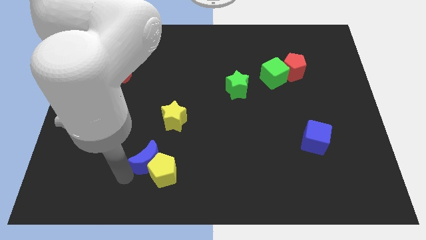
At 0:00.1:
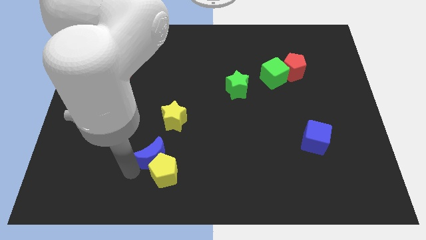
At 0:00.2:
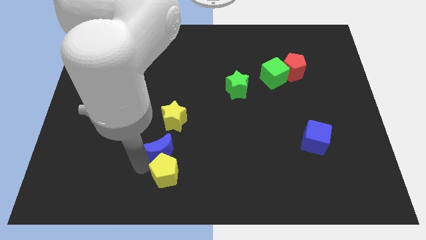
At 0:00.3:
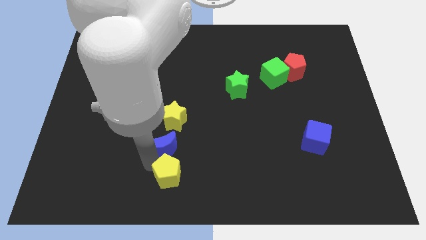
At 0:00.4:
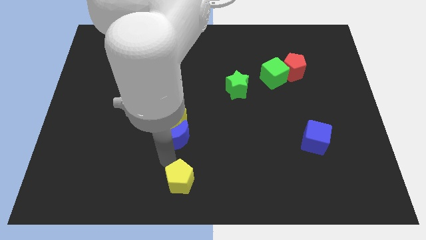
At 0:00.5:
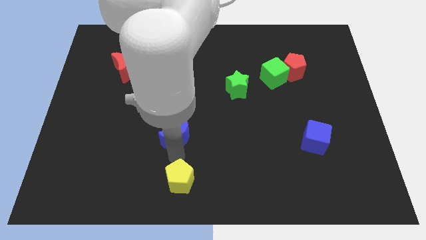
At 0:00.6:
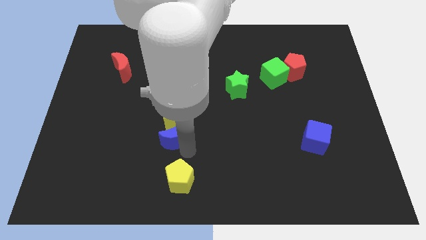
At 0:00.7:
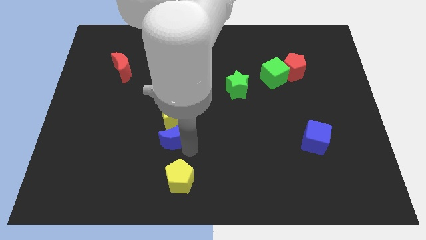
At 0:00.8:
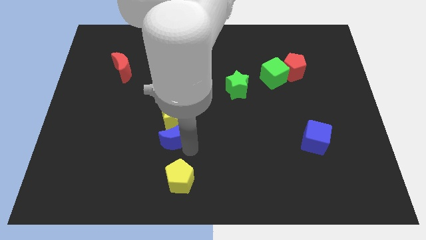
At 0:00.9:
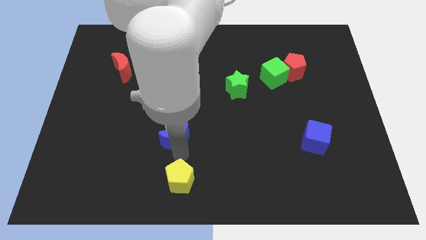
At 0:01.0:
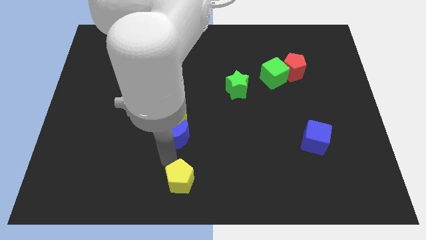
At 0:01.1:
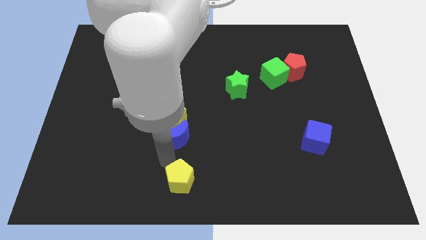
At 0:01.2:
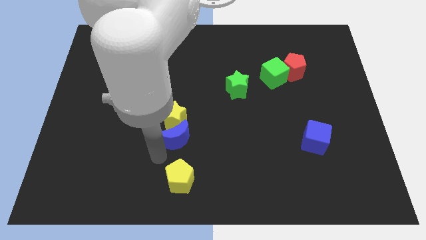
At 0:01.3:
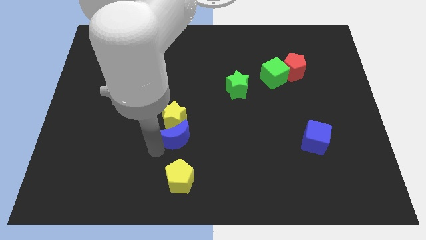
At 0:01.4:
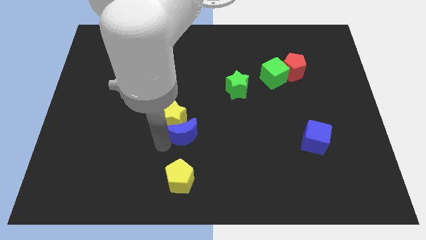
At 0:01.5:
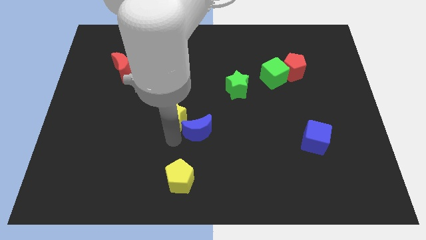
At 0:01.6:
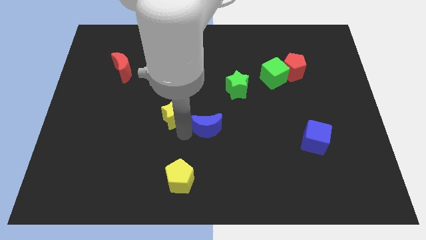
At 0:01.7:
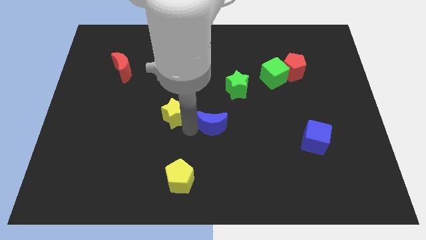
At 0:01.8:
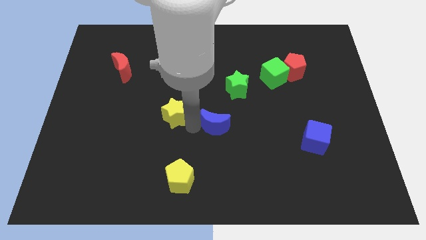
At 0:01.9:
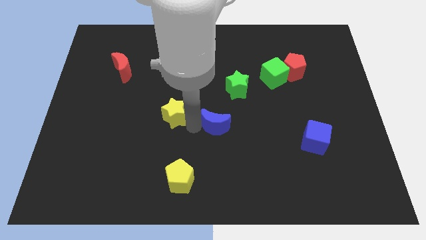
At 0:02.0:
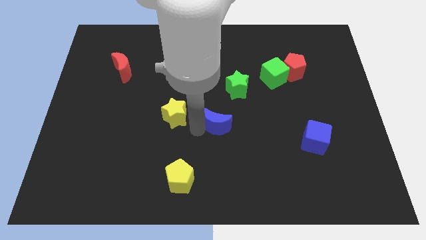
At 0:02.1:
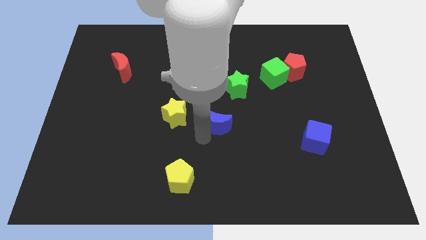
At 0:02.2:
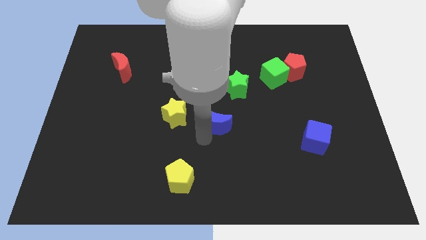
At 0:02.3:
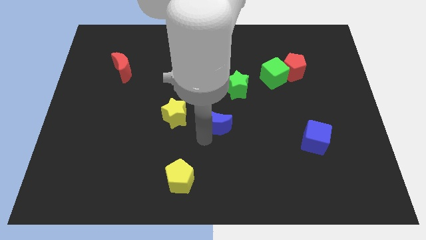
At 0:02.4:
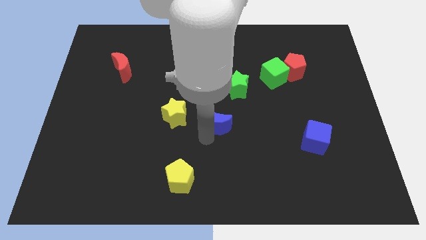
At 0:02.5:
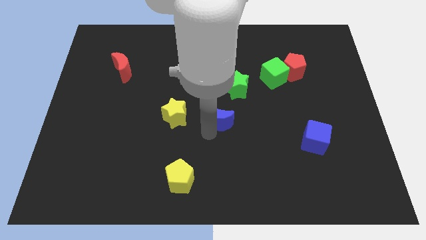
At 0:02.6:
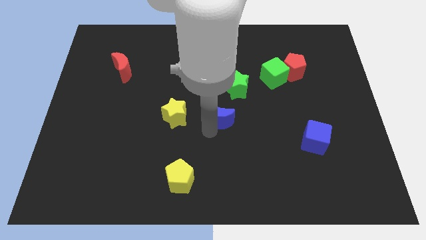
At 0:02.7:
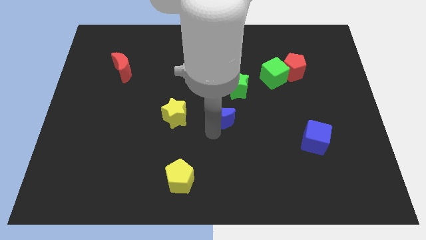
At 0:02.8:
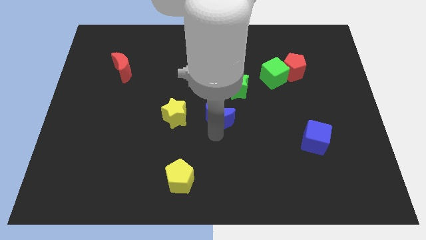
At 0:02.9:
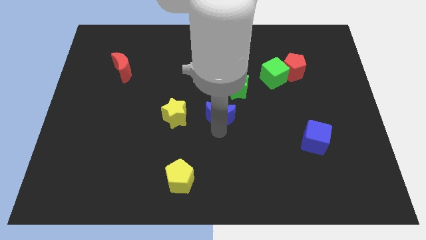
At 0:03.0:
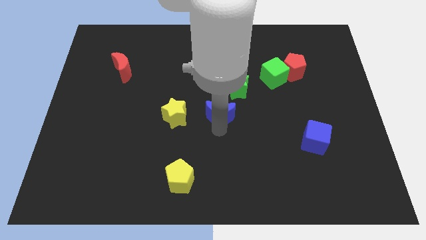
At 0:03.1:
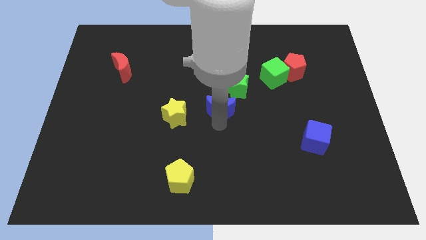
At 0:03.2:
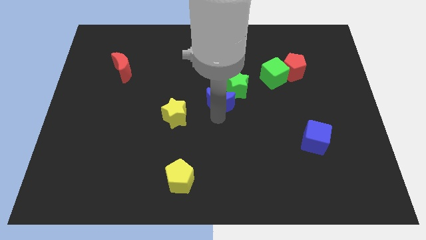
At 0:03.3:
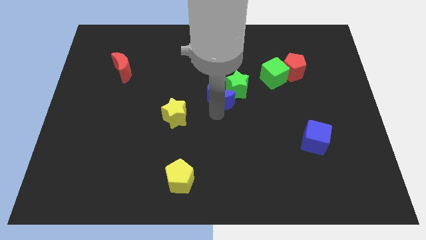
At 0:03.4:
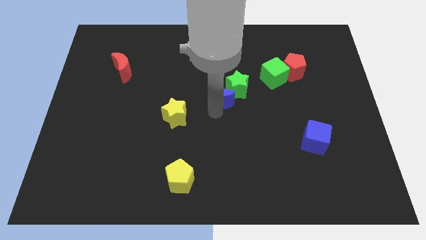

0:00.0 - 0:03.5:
place blue moon at the bottom left of green star

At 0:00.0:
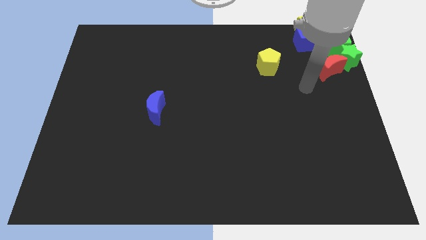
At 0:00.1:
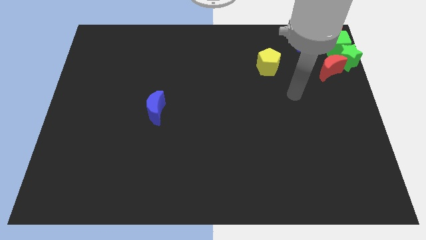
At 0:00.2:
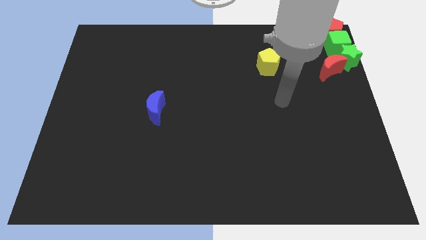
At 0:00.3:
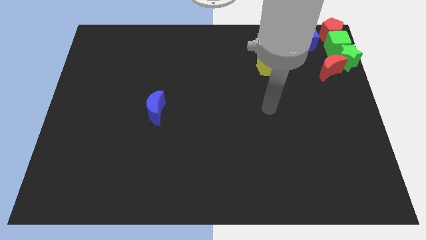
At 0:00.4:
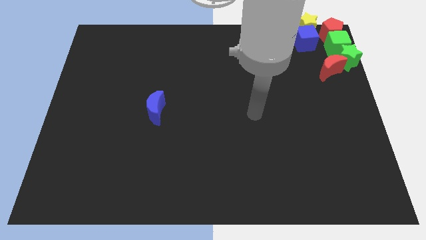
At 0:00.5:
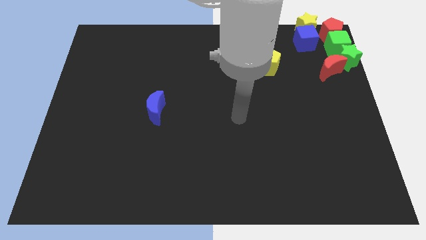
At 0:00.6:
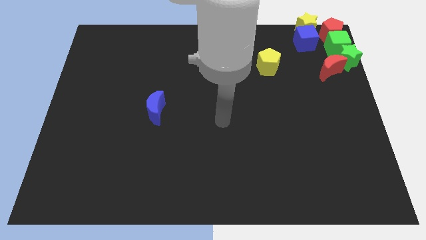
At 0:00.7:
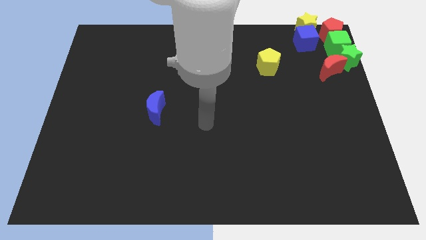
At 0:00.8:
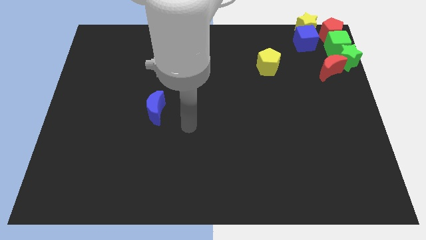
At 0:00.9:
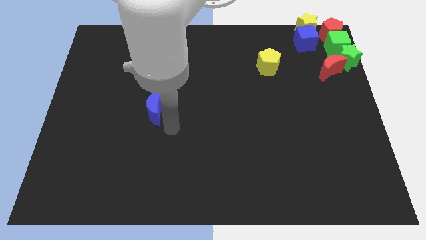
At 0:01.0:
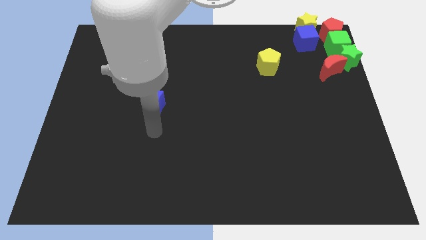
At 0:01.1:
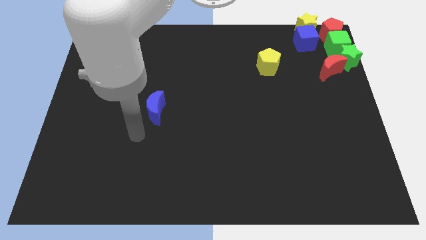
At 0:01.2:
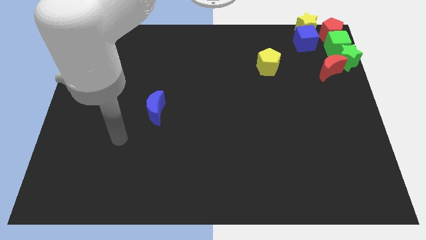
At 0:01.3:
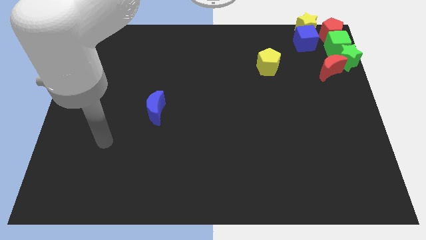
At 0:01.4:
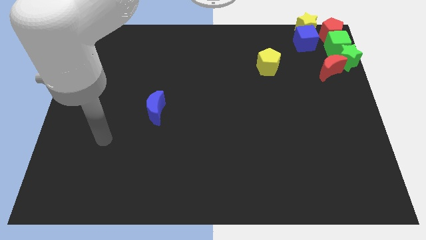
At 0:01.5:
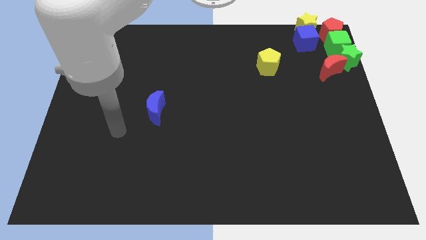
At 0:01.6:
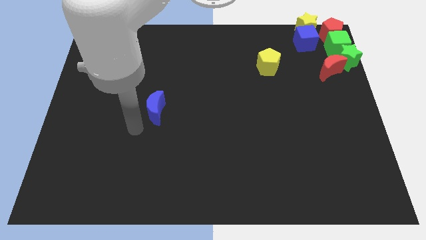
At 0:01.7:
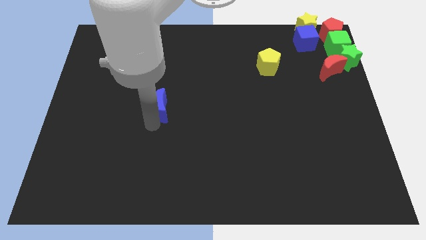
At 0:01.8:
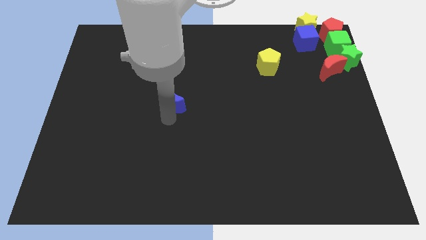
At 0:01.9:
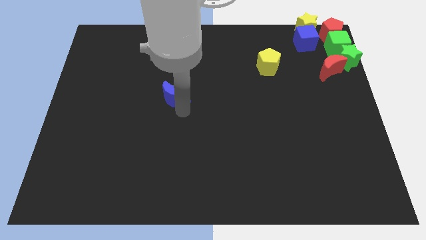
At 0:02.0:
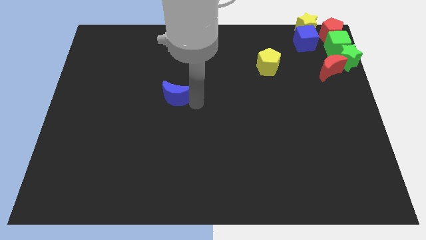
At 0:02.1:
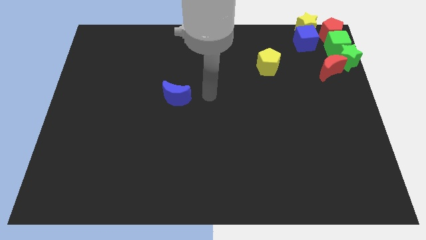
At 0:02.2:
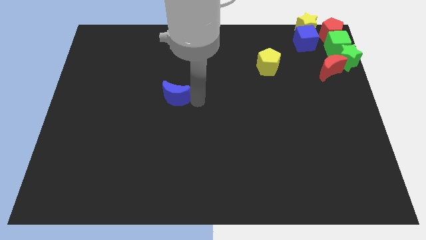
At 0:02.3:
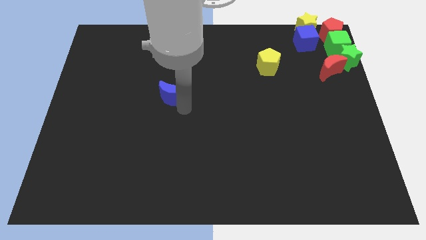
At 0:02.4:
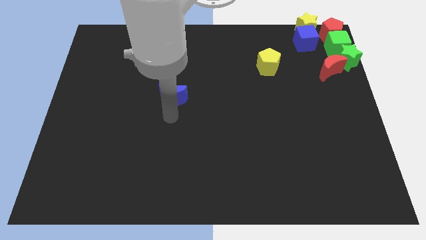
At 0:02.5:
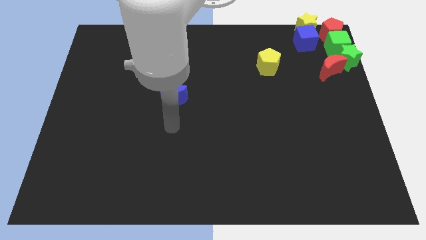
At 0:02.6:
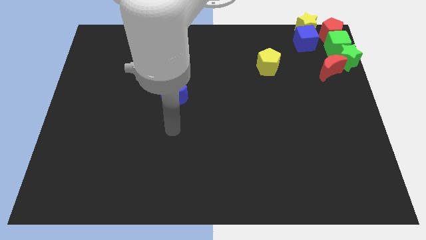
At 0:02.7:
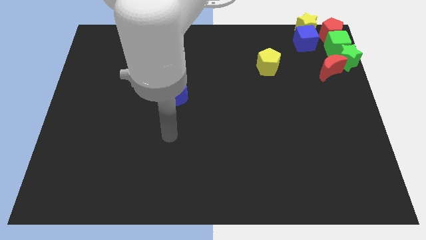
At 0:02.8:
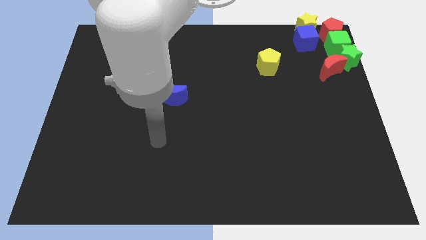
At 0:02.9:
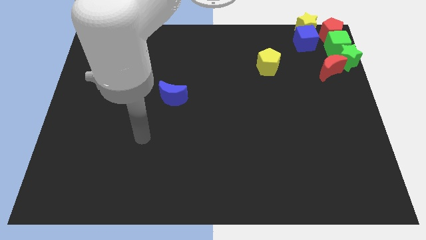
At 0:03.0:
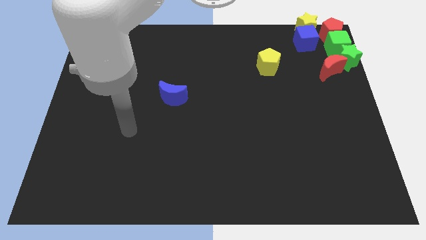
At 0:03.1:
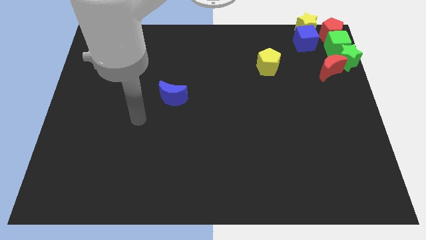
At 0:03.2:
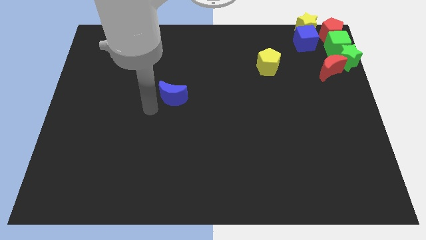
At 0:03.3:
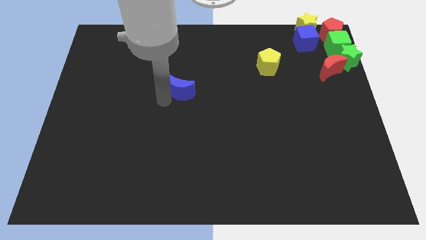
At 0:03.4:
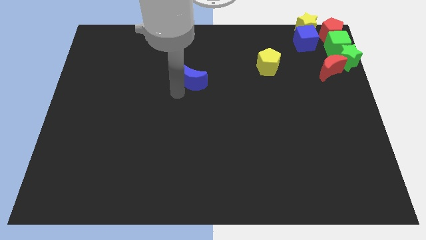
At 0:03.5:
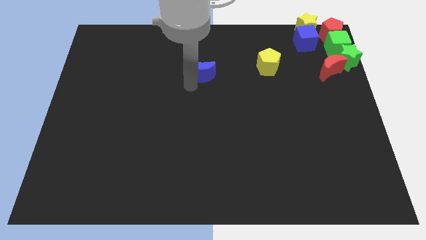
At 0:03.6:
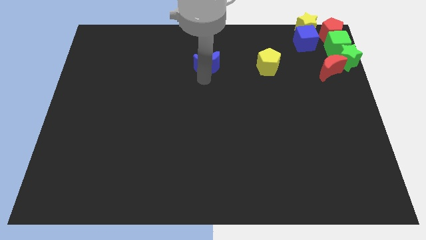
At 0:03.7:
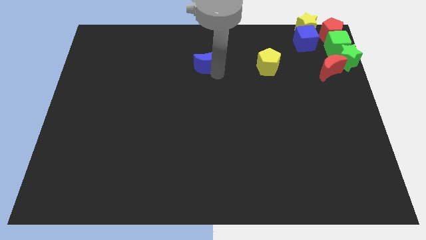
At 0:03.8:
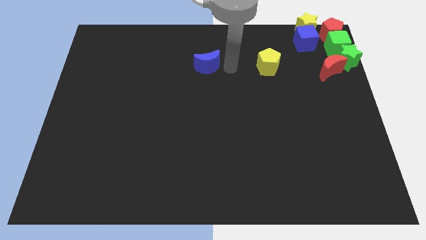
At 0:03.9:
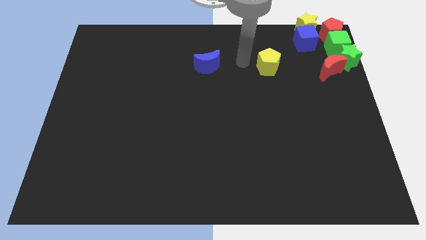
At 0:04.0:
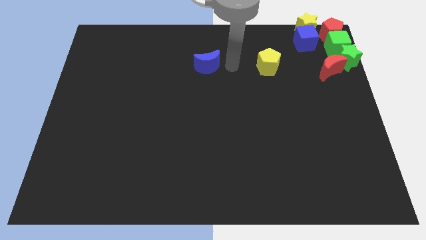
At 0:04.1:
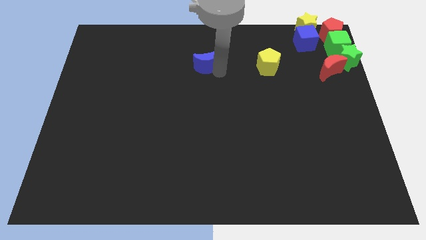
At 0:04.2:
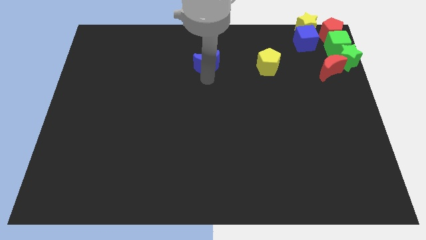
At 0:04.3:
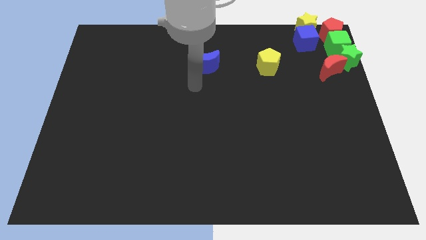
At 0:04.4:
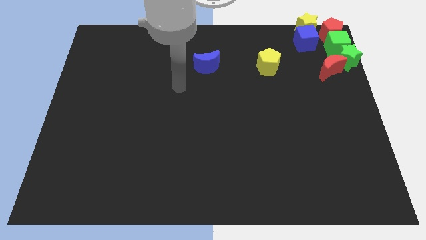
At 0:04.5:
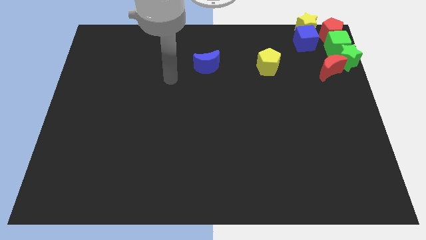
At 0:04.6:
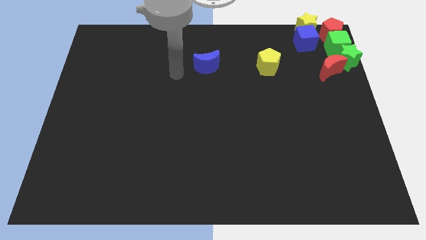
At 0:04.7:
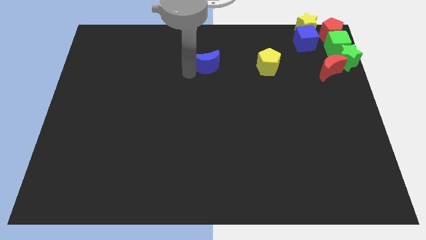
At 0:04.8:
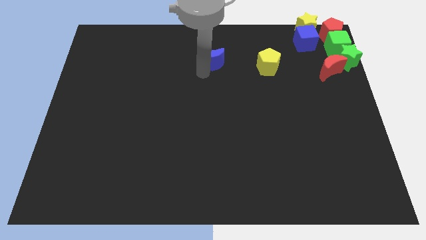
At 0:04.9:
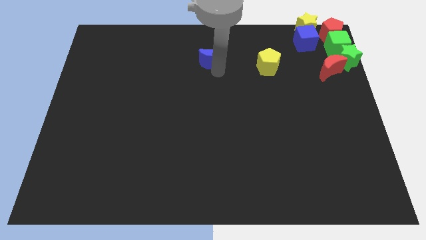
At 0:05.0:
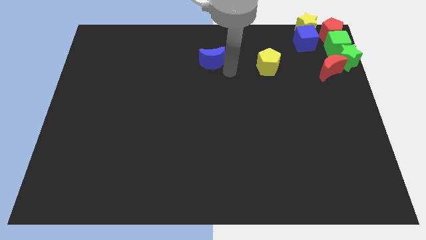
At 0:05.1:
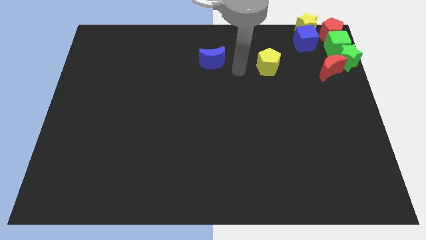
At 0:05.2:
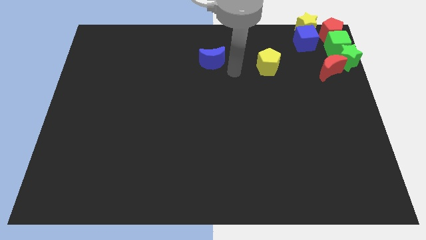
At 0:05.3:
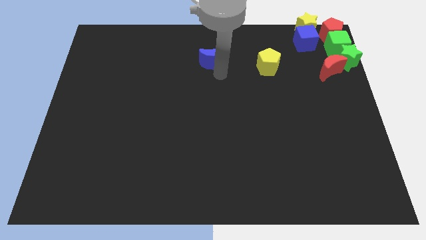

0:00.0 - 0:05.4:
move the blue crescent to the left of yellow pentagon
